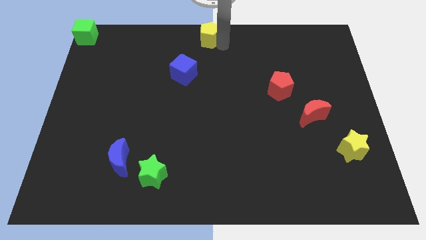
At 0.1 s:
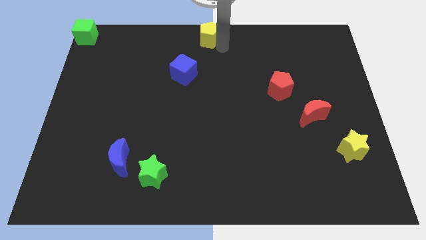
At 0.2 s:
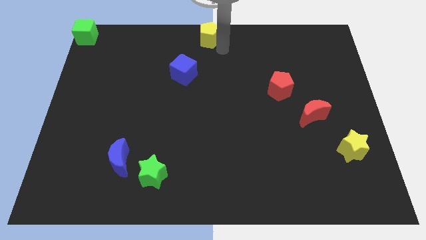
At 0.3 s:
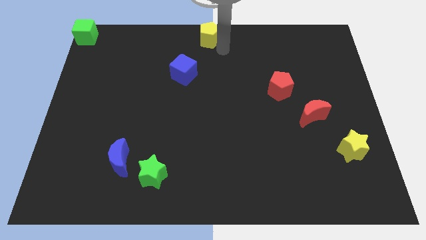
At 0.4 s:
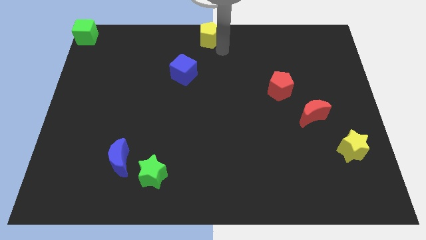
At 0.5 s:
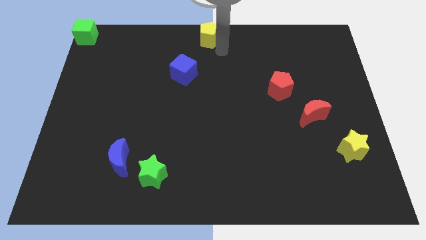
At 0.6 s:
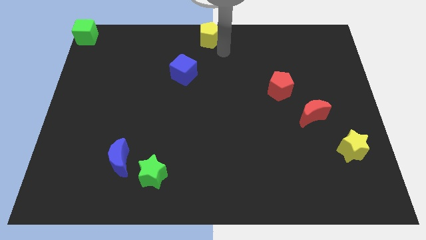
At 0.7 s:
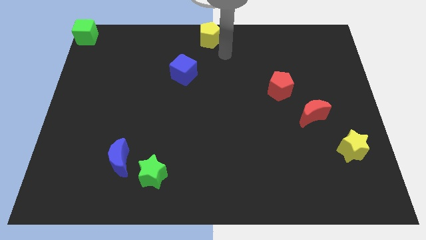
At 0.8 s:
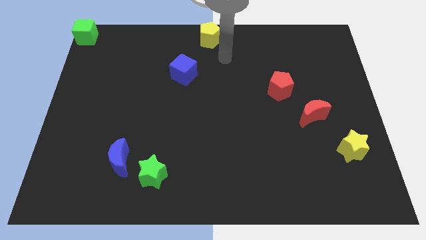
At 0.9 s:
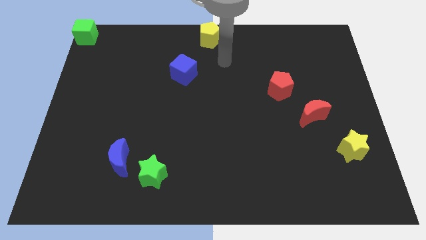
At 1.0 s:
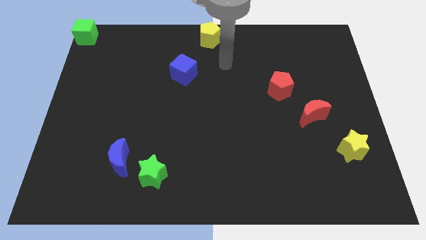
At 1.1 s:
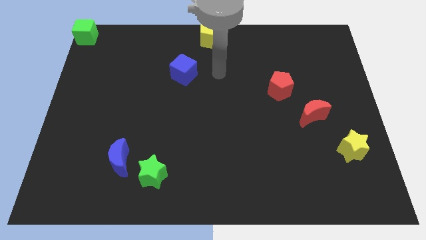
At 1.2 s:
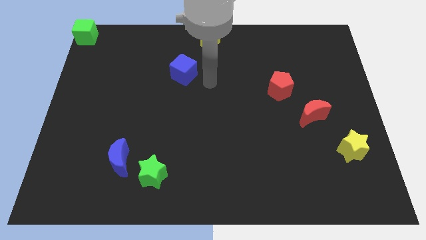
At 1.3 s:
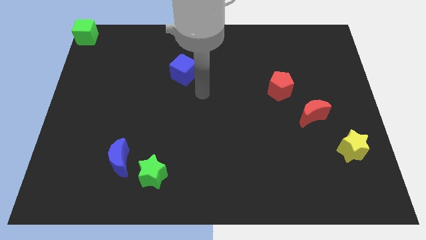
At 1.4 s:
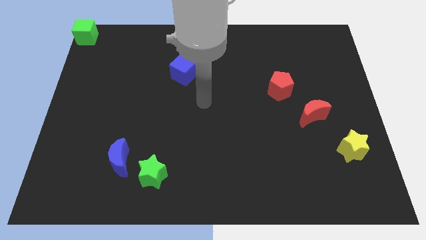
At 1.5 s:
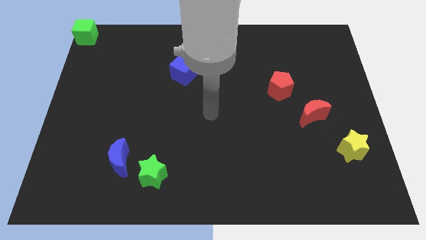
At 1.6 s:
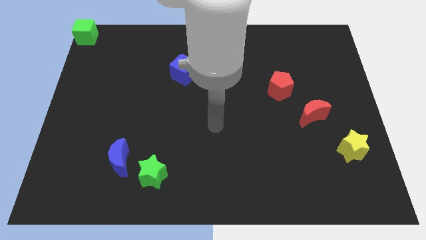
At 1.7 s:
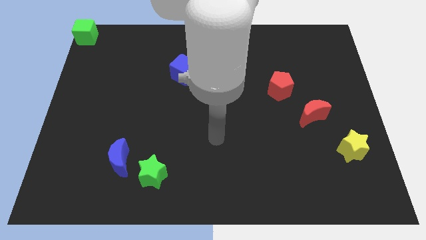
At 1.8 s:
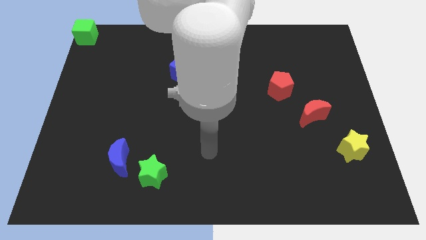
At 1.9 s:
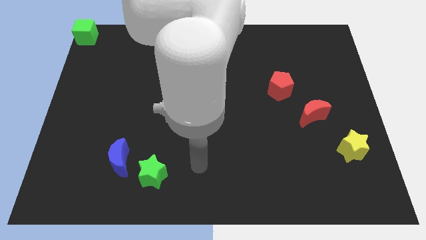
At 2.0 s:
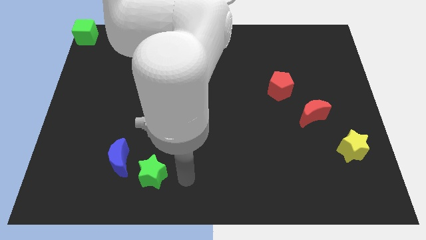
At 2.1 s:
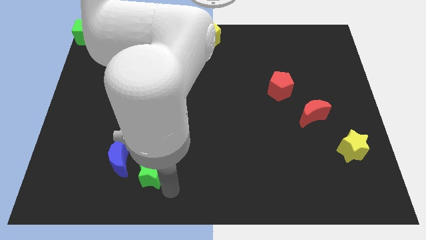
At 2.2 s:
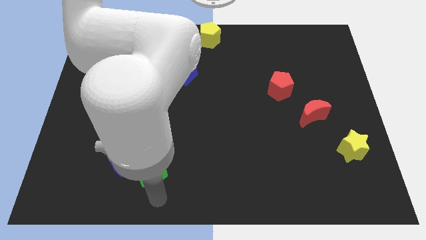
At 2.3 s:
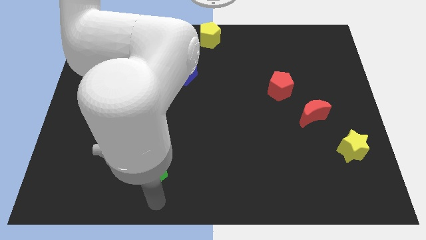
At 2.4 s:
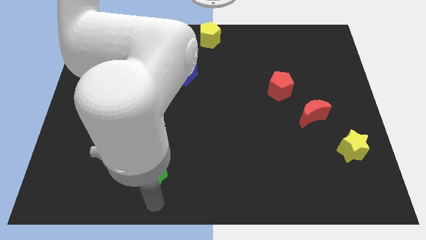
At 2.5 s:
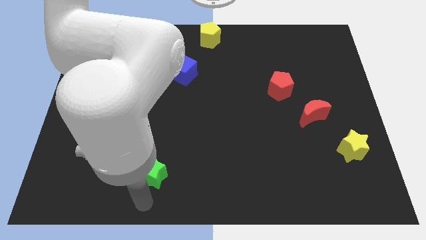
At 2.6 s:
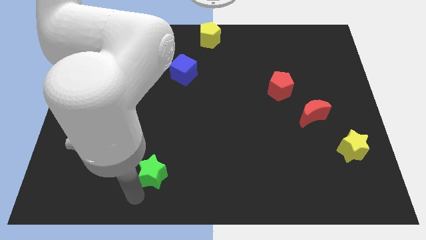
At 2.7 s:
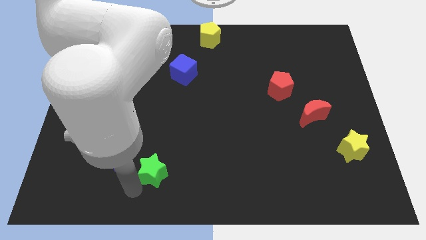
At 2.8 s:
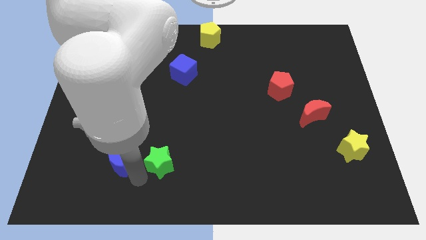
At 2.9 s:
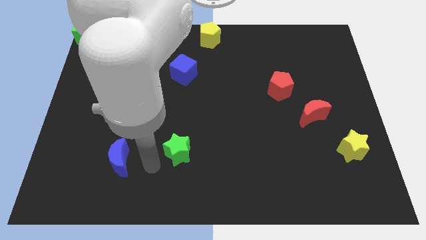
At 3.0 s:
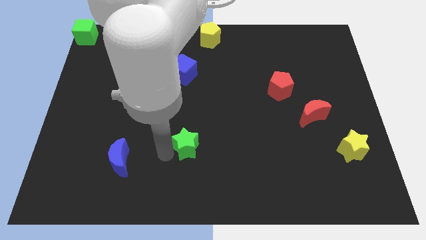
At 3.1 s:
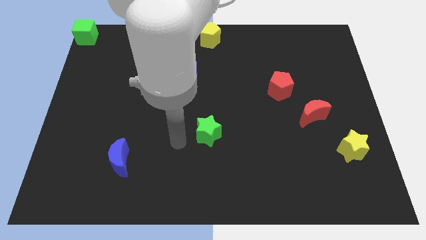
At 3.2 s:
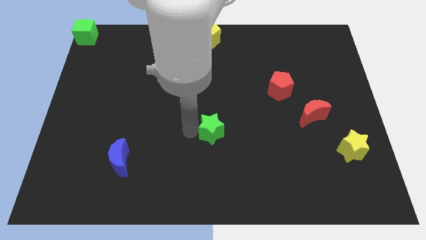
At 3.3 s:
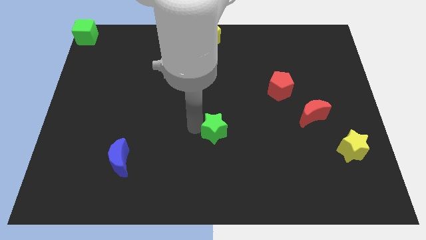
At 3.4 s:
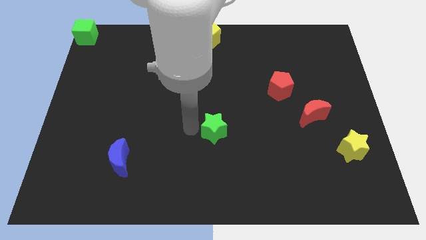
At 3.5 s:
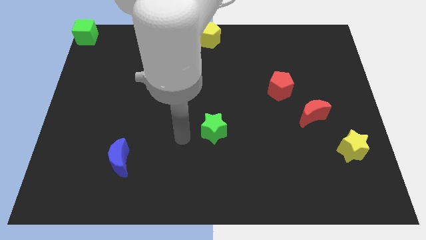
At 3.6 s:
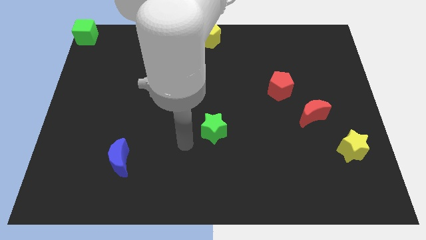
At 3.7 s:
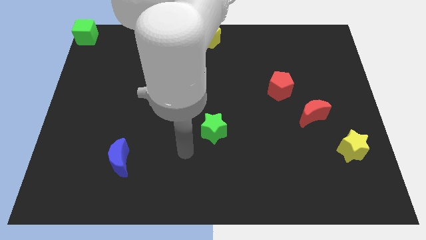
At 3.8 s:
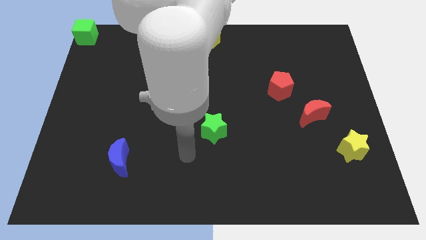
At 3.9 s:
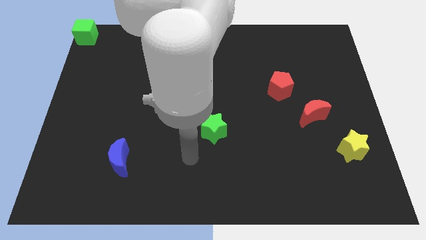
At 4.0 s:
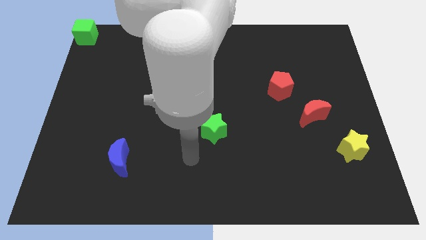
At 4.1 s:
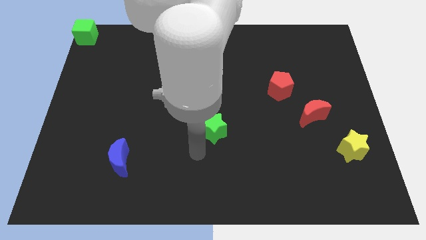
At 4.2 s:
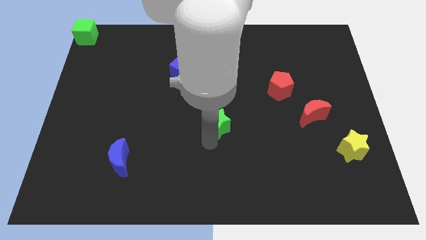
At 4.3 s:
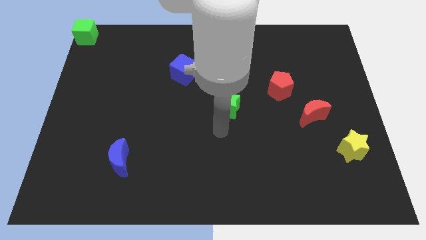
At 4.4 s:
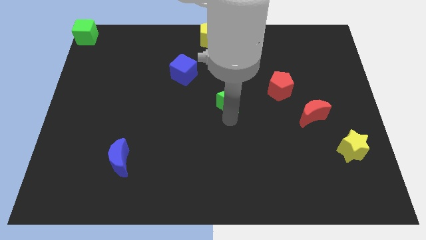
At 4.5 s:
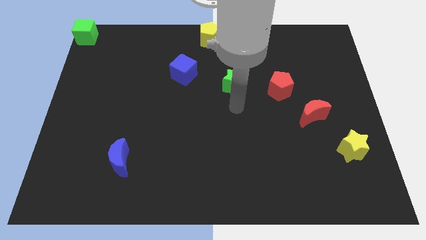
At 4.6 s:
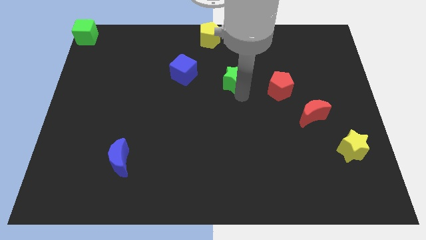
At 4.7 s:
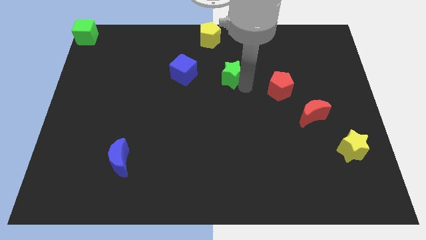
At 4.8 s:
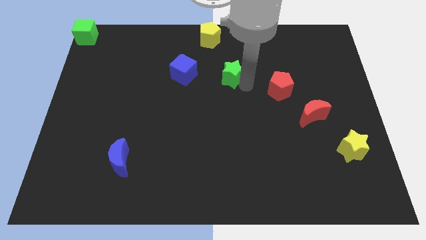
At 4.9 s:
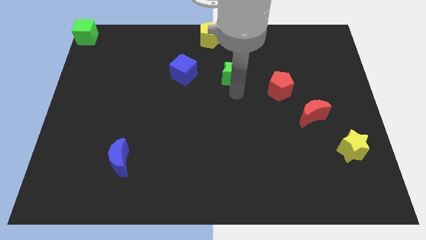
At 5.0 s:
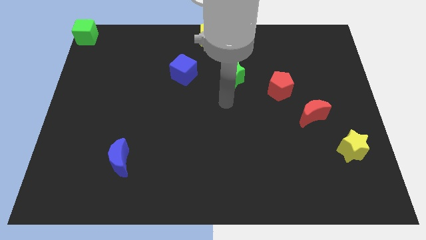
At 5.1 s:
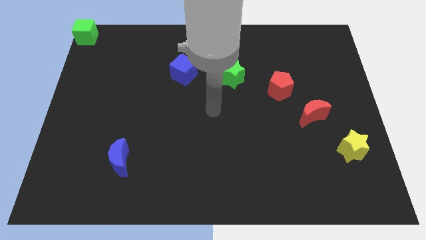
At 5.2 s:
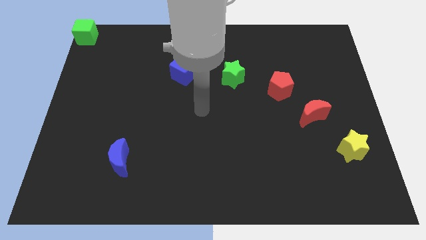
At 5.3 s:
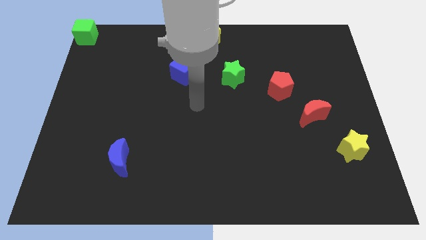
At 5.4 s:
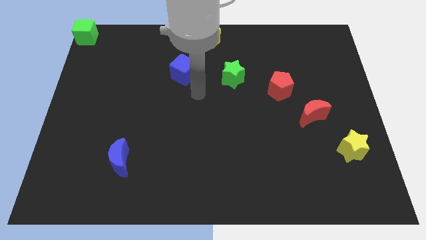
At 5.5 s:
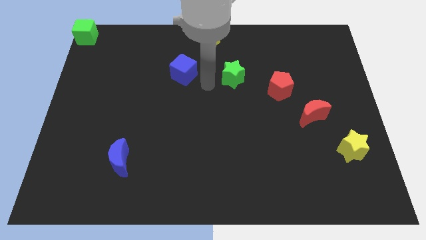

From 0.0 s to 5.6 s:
place the green star in between blue cube and red pentagon

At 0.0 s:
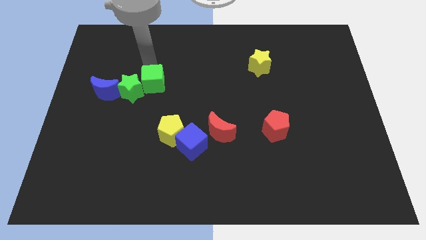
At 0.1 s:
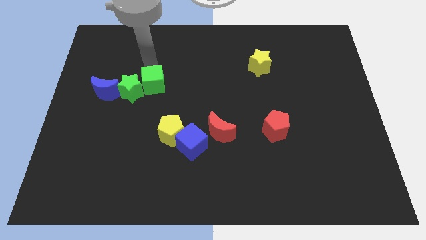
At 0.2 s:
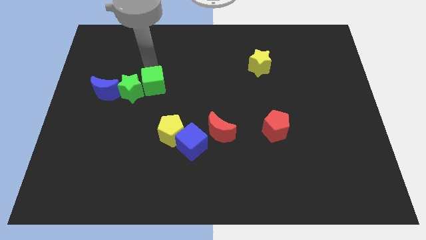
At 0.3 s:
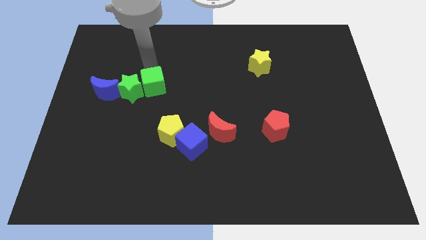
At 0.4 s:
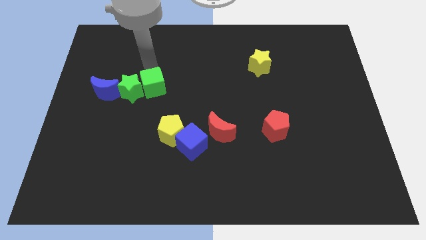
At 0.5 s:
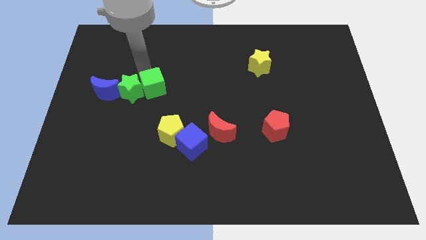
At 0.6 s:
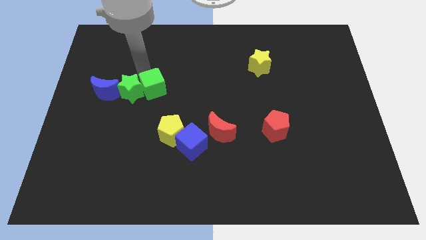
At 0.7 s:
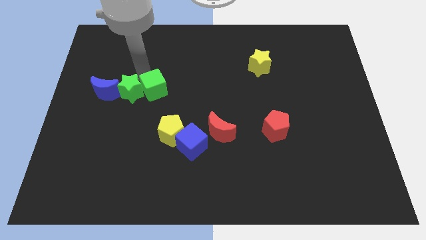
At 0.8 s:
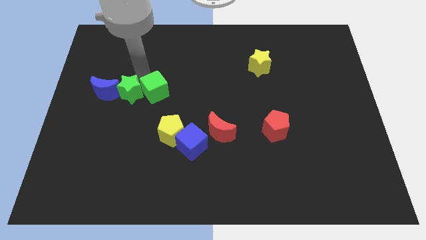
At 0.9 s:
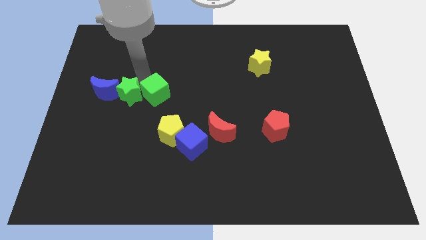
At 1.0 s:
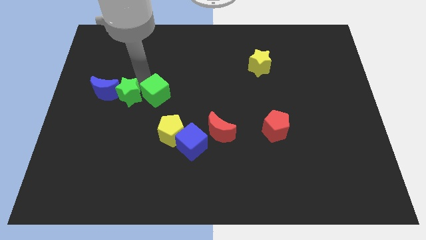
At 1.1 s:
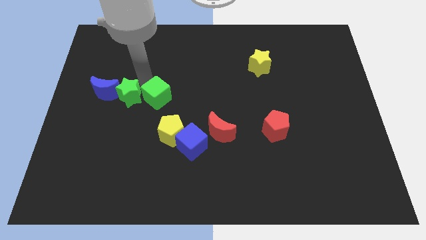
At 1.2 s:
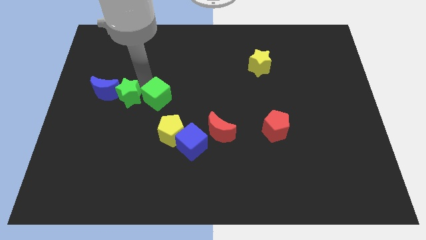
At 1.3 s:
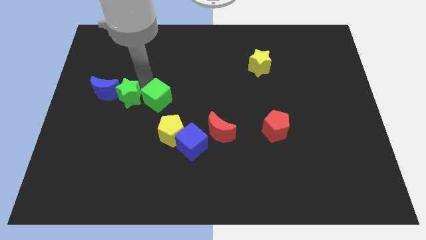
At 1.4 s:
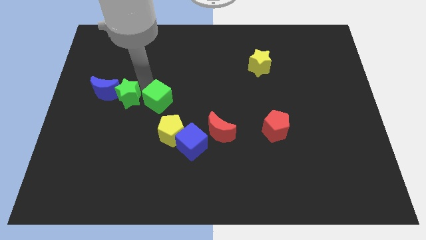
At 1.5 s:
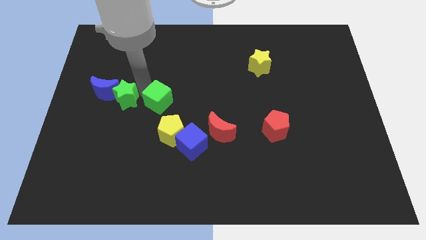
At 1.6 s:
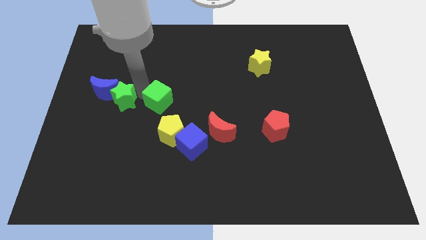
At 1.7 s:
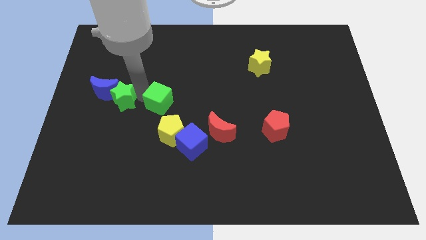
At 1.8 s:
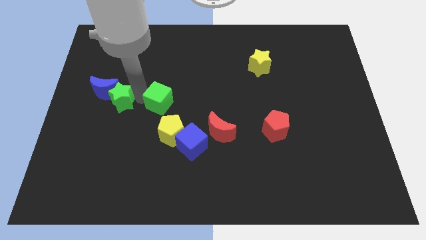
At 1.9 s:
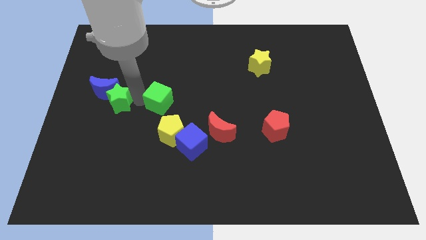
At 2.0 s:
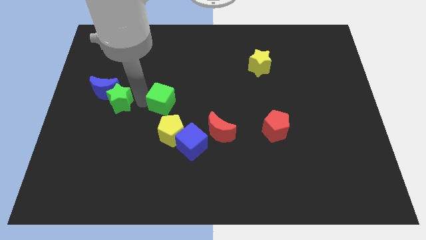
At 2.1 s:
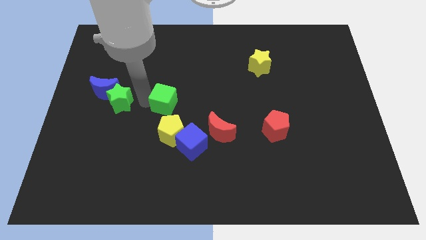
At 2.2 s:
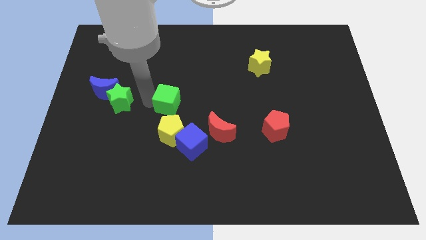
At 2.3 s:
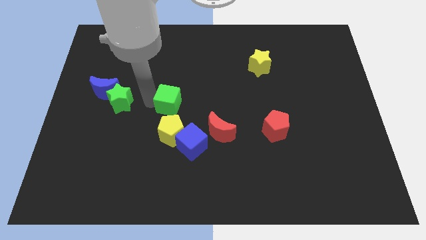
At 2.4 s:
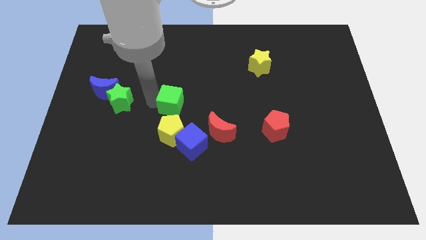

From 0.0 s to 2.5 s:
move the green cube to the top of the yellow pentagon

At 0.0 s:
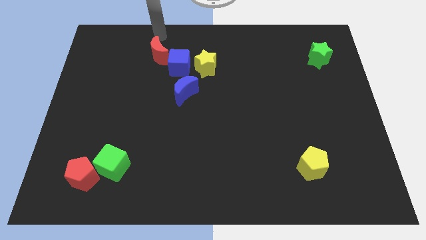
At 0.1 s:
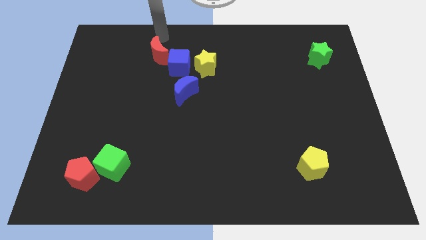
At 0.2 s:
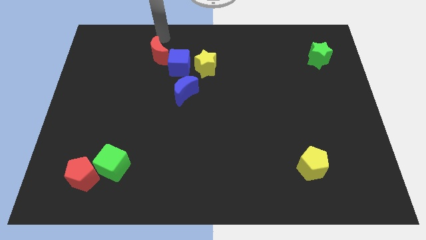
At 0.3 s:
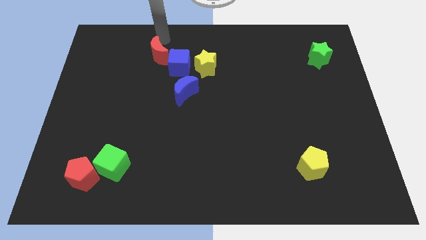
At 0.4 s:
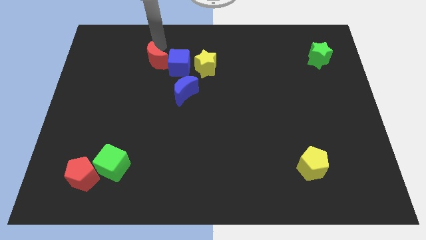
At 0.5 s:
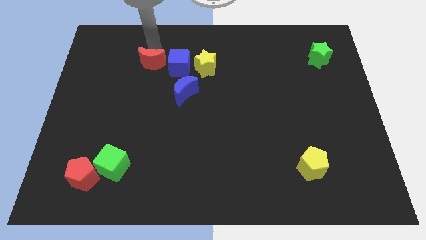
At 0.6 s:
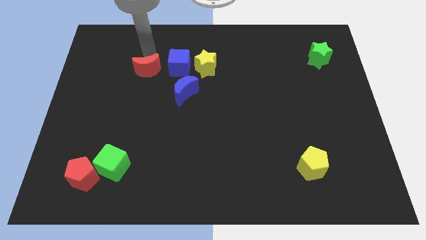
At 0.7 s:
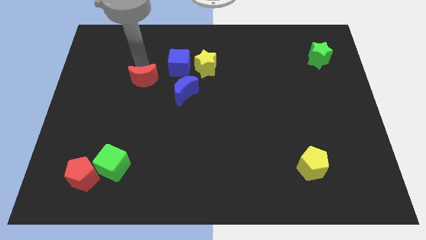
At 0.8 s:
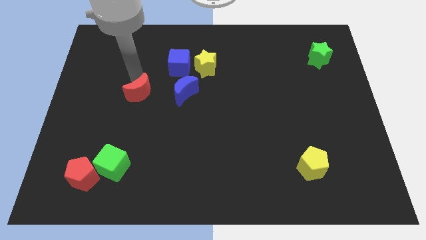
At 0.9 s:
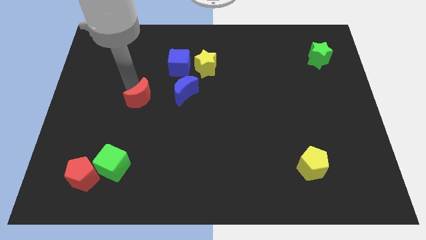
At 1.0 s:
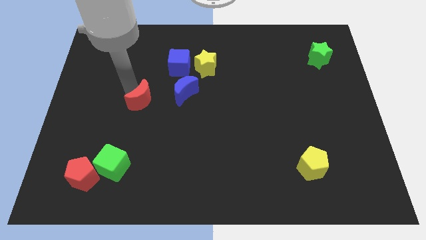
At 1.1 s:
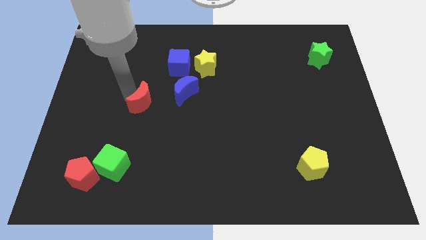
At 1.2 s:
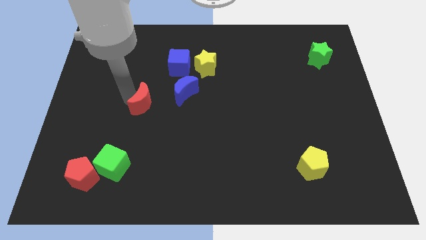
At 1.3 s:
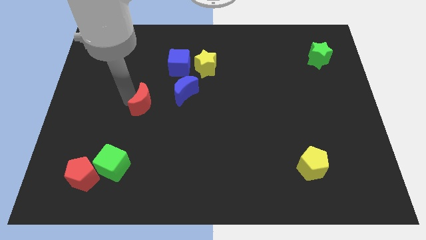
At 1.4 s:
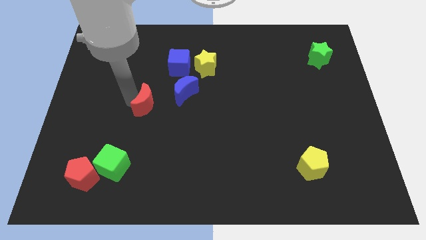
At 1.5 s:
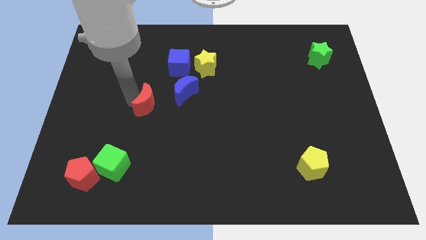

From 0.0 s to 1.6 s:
move the red crescent towards bottom of the board
